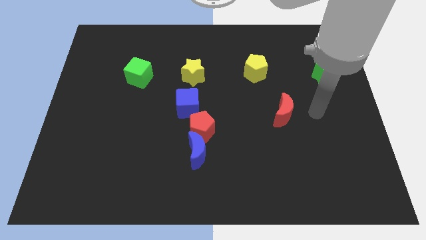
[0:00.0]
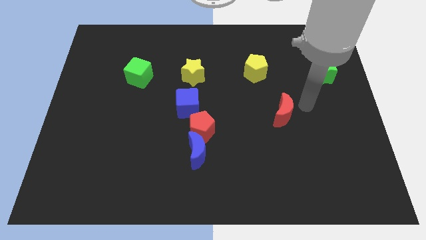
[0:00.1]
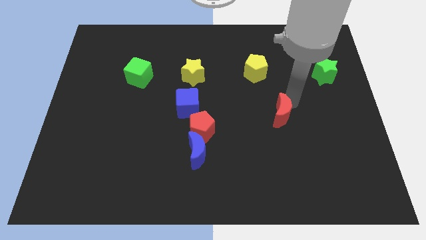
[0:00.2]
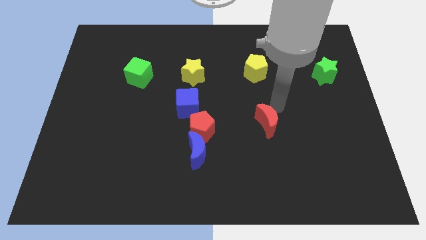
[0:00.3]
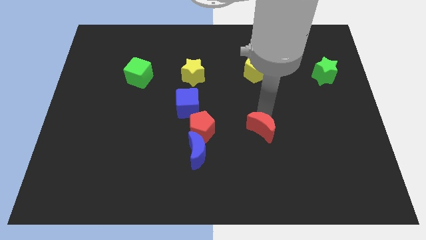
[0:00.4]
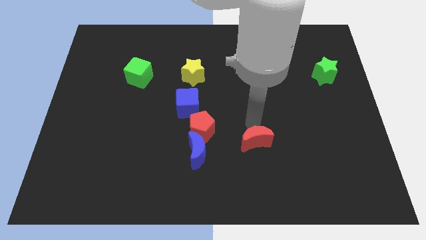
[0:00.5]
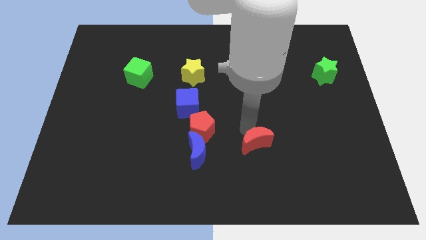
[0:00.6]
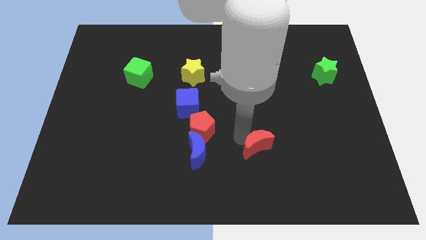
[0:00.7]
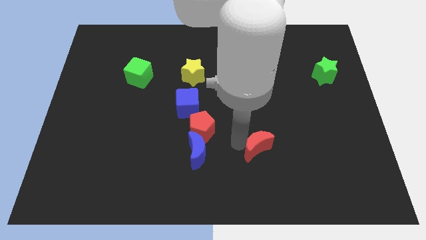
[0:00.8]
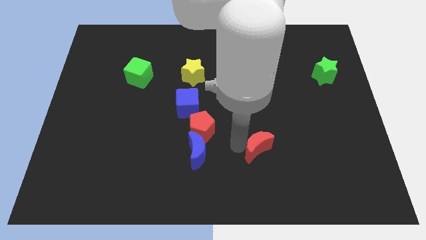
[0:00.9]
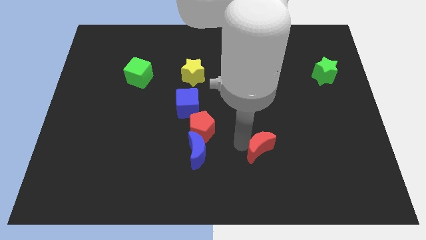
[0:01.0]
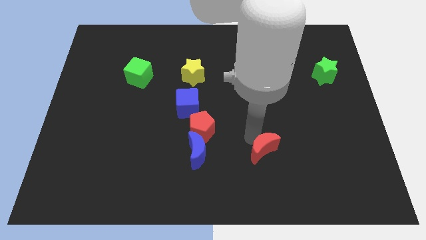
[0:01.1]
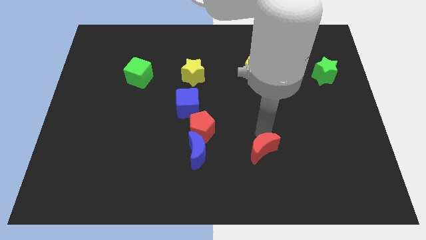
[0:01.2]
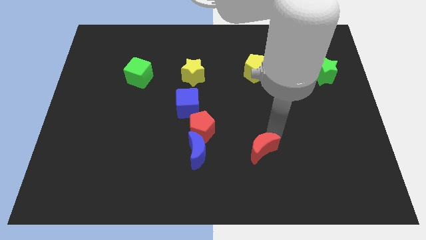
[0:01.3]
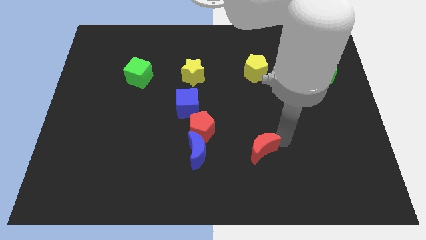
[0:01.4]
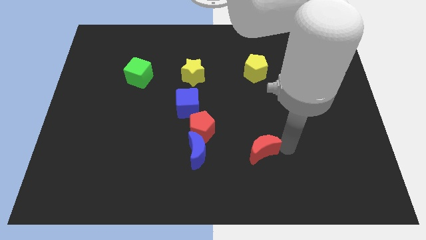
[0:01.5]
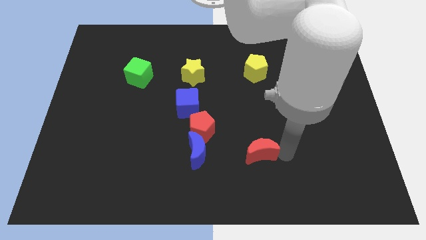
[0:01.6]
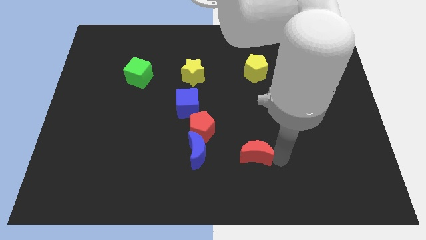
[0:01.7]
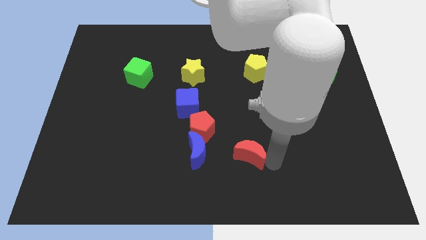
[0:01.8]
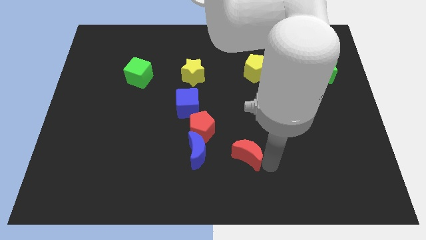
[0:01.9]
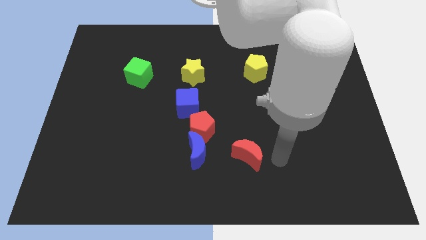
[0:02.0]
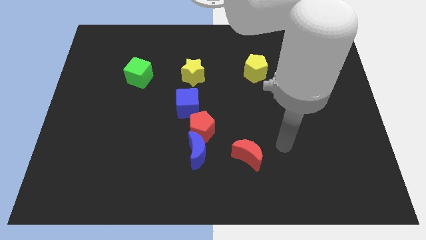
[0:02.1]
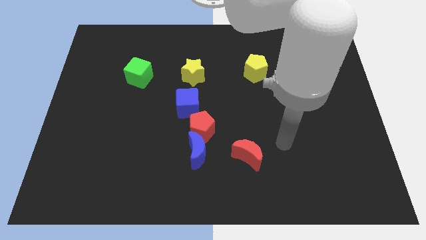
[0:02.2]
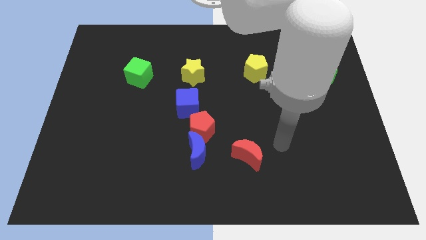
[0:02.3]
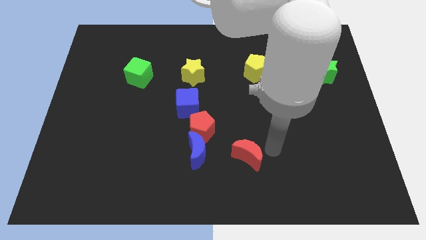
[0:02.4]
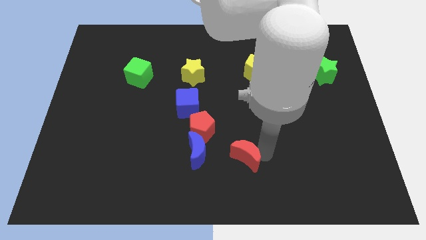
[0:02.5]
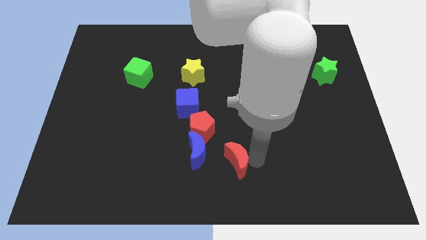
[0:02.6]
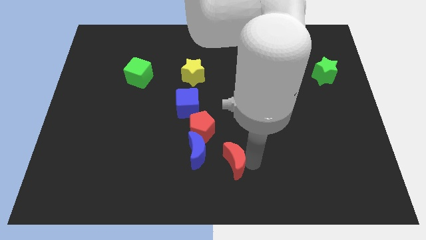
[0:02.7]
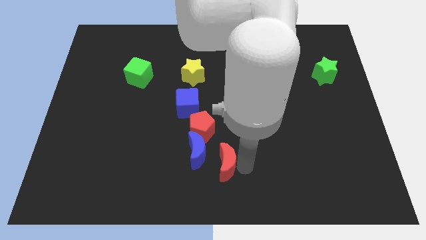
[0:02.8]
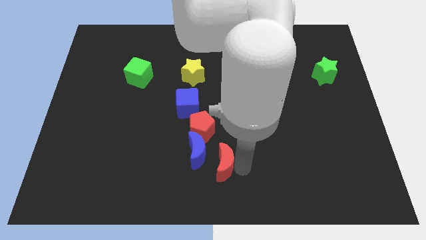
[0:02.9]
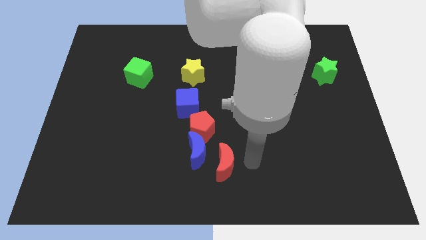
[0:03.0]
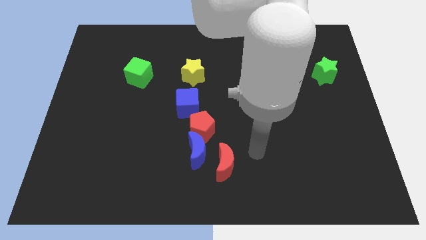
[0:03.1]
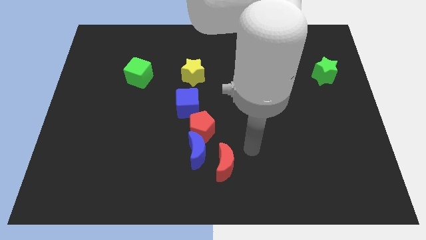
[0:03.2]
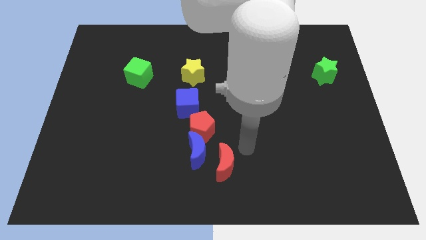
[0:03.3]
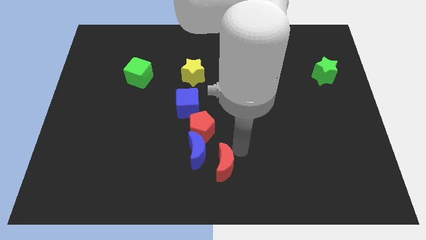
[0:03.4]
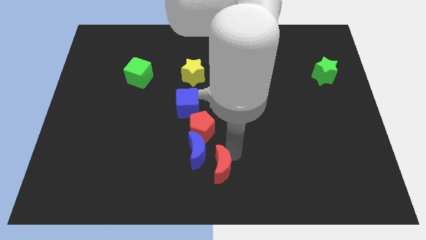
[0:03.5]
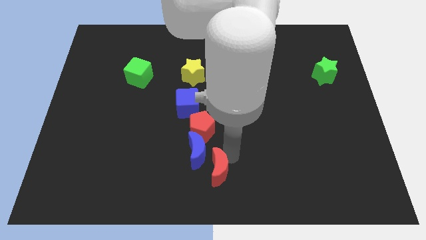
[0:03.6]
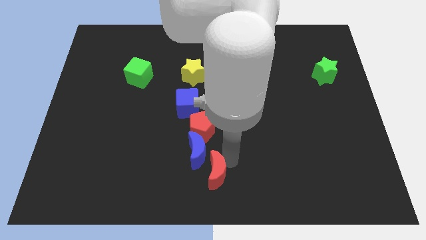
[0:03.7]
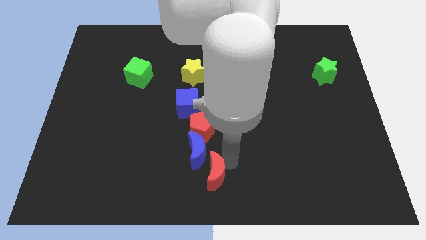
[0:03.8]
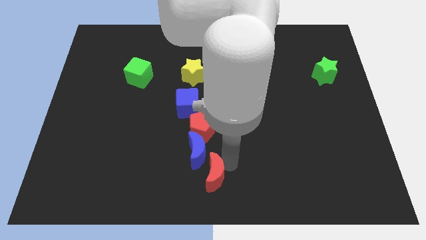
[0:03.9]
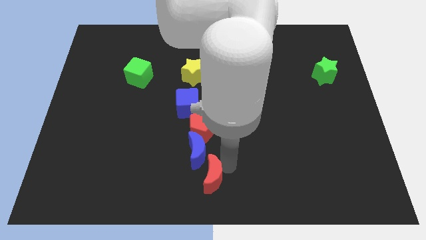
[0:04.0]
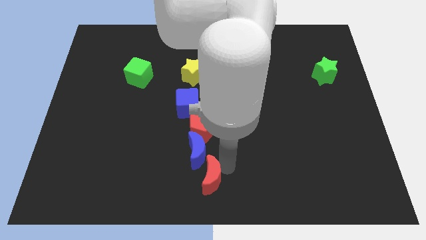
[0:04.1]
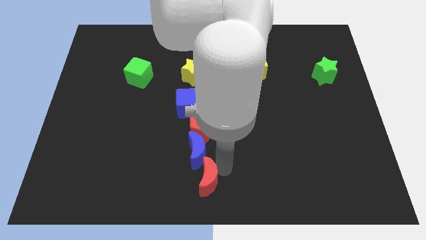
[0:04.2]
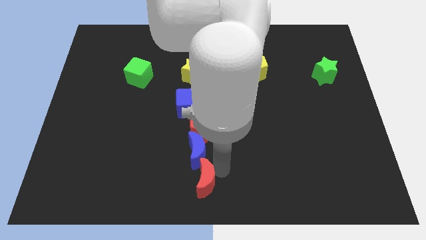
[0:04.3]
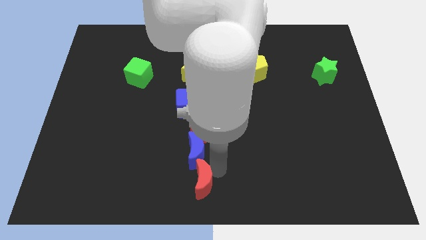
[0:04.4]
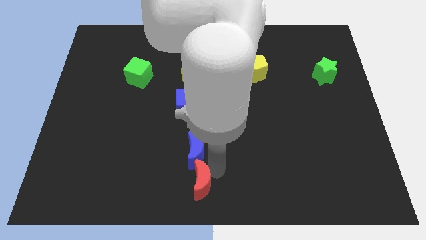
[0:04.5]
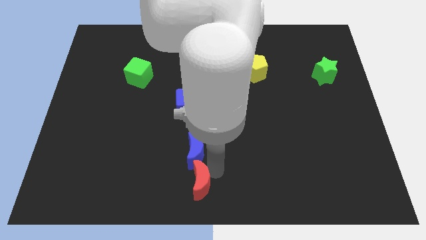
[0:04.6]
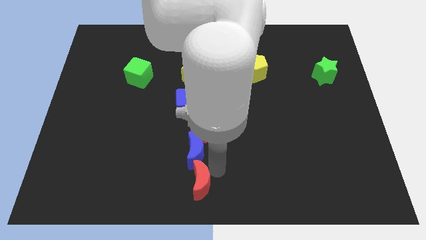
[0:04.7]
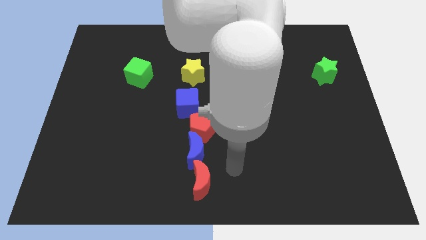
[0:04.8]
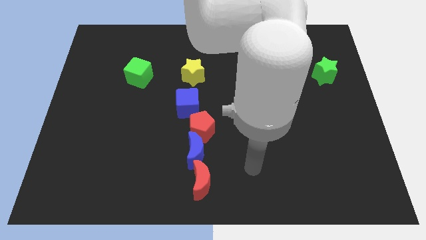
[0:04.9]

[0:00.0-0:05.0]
push the red crecent to the bottom side of the blue moon

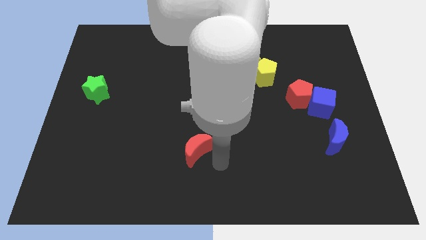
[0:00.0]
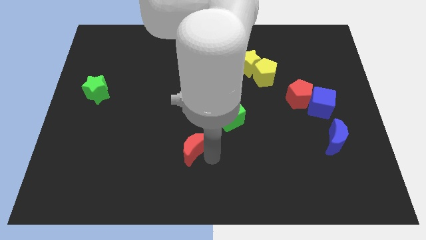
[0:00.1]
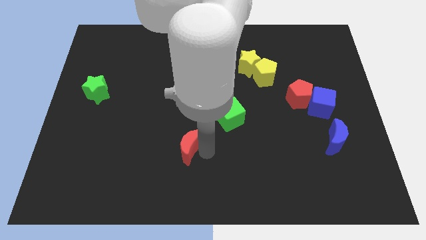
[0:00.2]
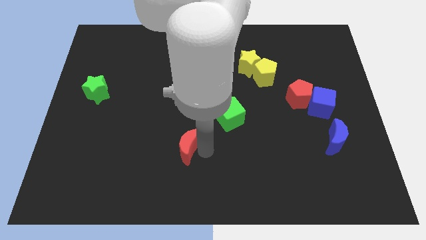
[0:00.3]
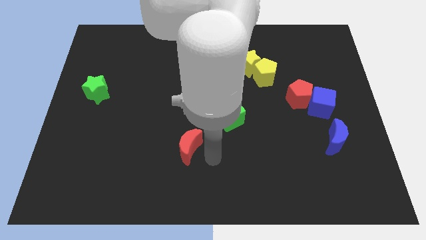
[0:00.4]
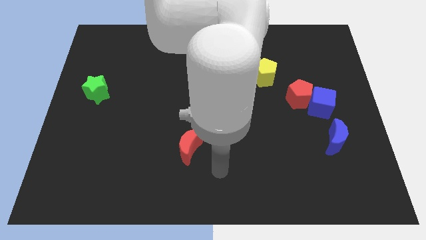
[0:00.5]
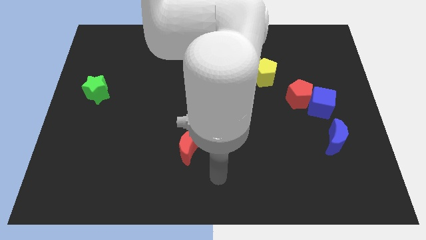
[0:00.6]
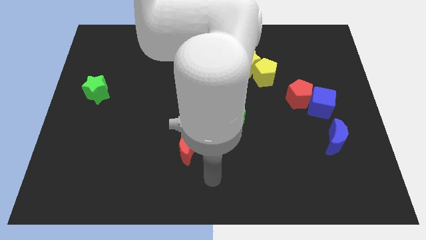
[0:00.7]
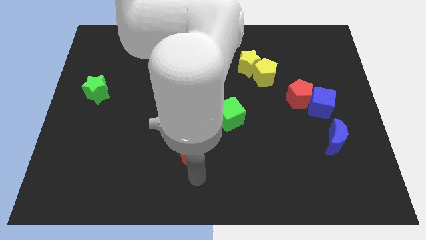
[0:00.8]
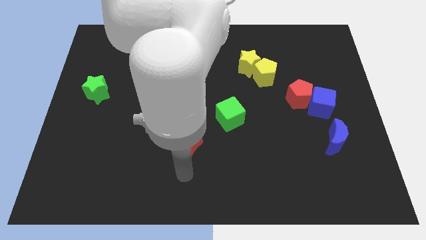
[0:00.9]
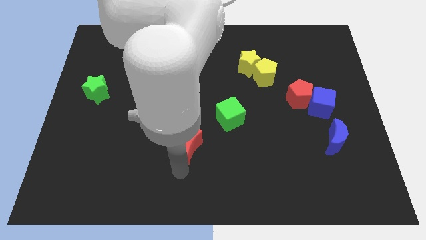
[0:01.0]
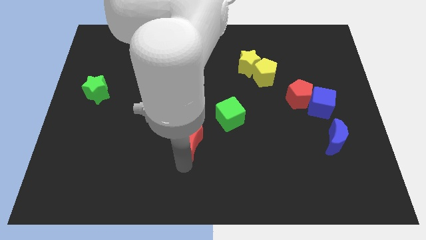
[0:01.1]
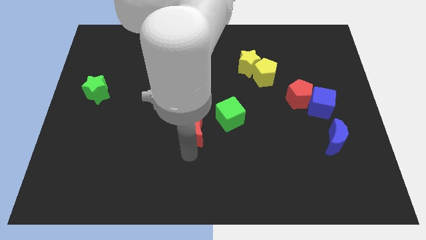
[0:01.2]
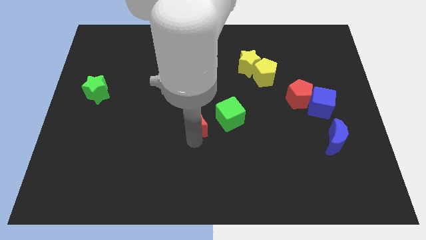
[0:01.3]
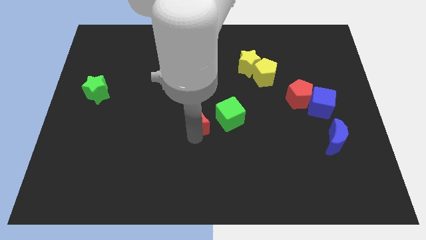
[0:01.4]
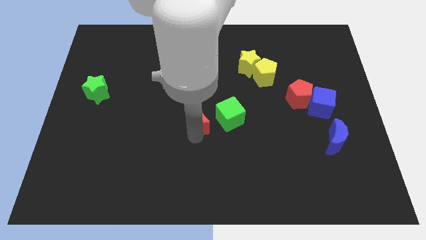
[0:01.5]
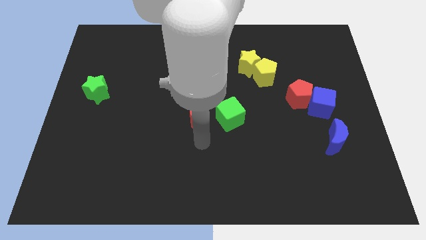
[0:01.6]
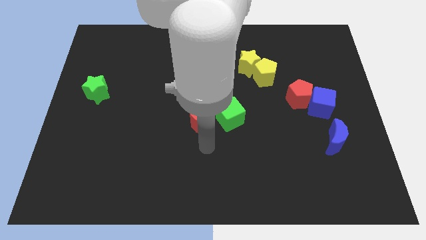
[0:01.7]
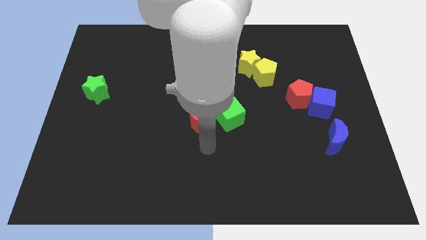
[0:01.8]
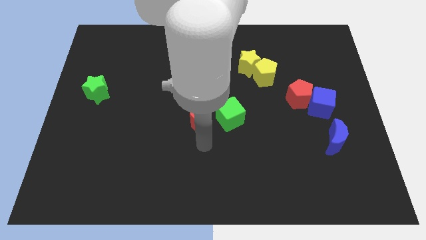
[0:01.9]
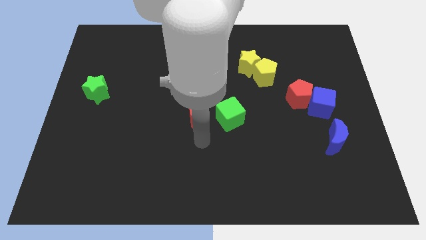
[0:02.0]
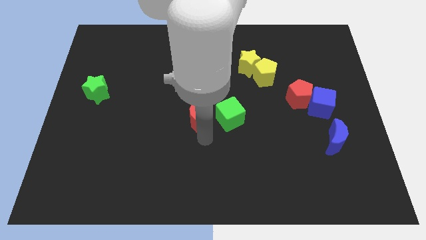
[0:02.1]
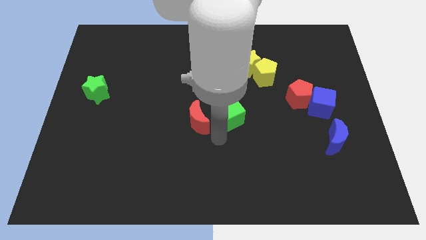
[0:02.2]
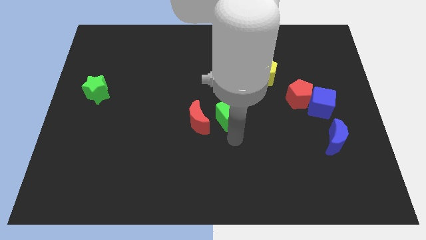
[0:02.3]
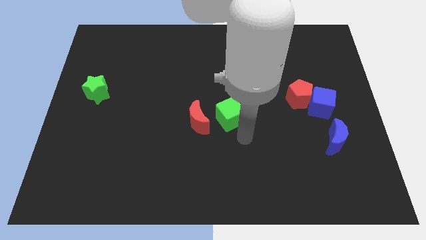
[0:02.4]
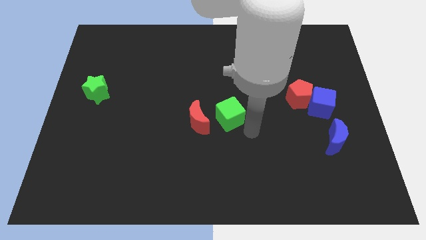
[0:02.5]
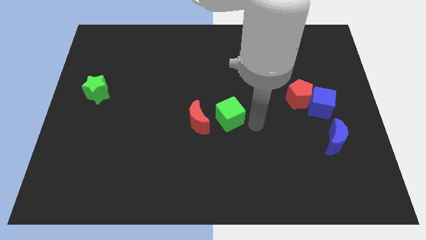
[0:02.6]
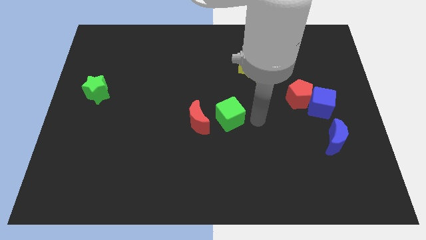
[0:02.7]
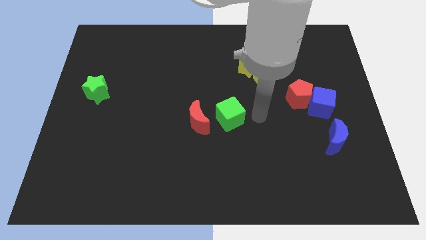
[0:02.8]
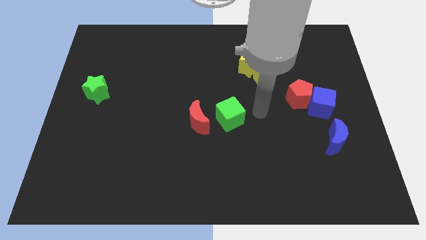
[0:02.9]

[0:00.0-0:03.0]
move red moon to the left of green cube

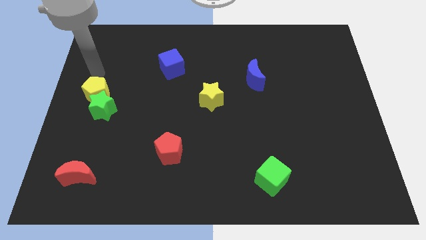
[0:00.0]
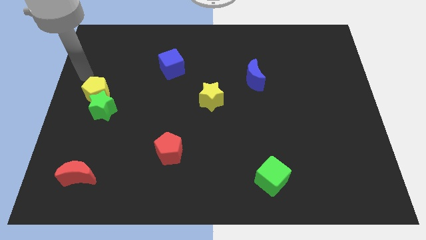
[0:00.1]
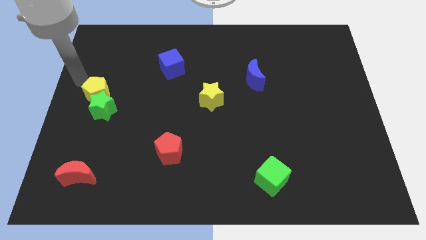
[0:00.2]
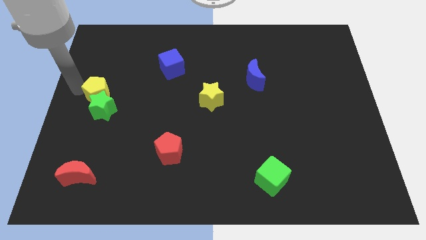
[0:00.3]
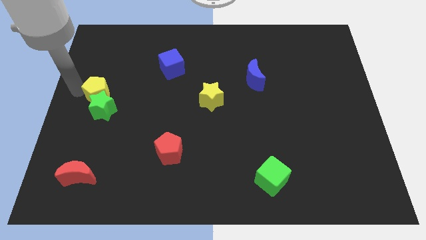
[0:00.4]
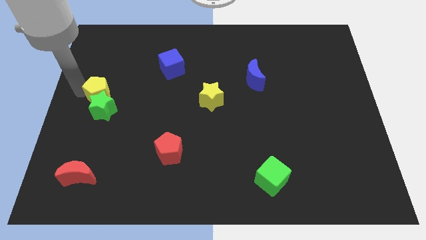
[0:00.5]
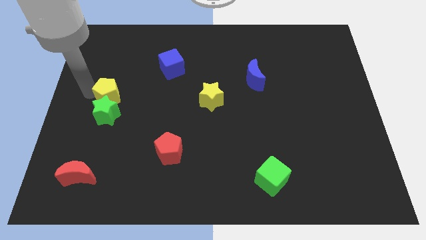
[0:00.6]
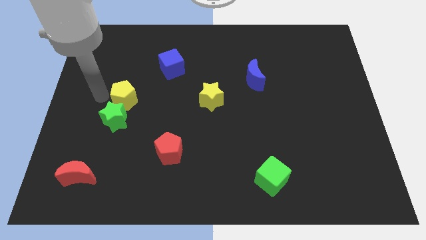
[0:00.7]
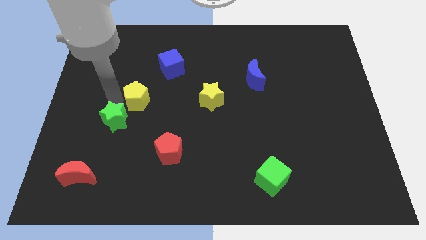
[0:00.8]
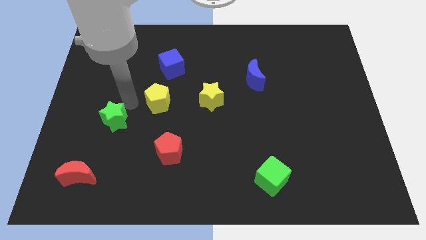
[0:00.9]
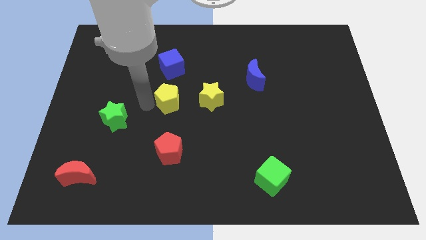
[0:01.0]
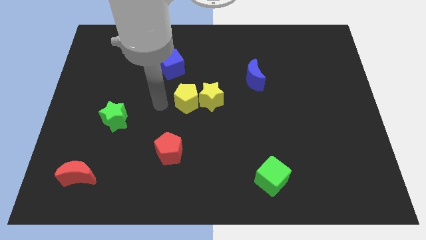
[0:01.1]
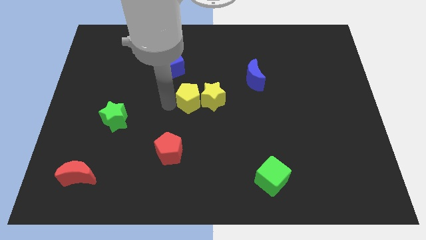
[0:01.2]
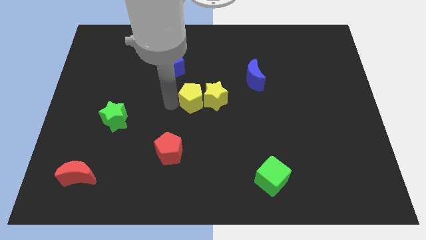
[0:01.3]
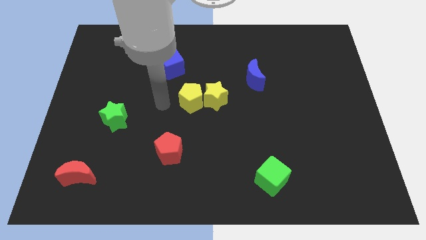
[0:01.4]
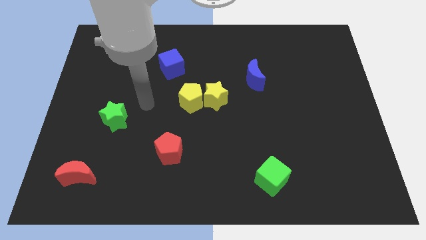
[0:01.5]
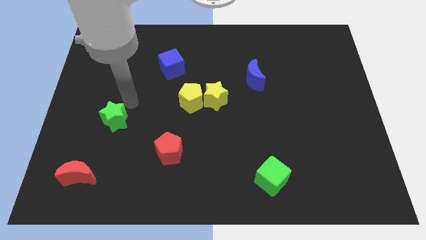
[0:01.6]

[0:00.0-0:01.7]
move yellow pentagon left to the yellow star
